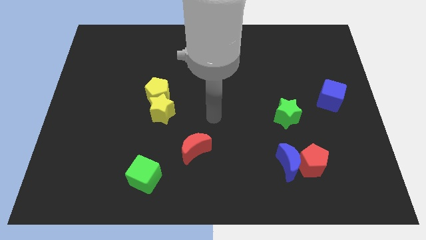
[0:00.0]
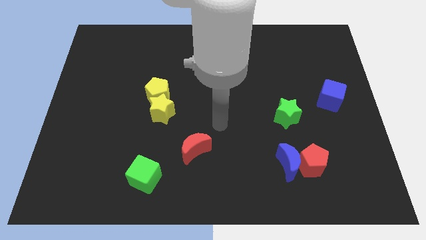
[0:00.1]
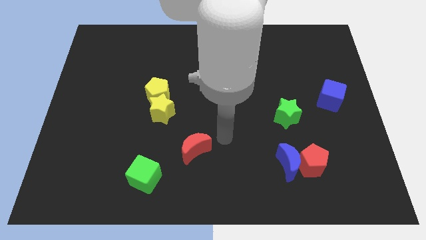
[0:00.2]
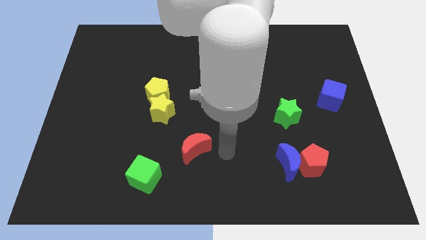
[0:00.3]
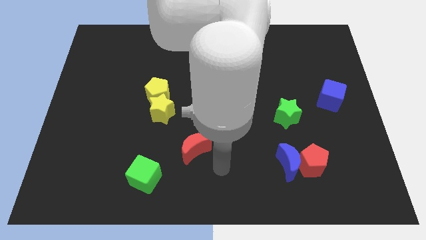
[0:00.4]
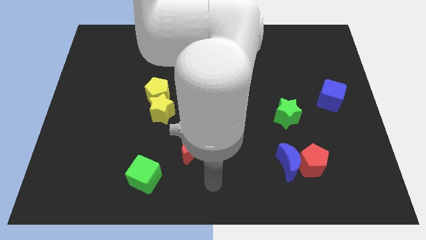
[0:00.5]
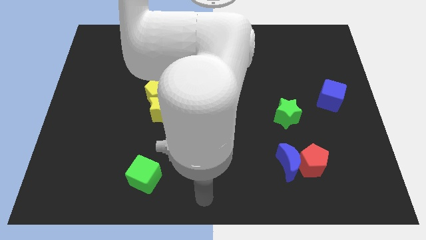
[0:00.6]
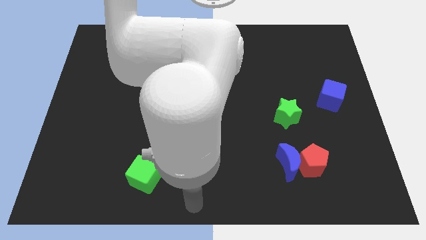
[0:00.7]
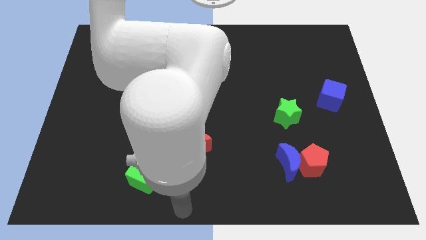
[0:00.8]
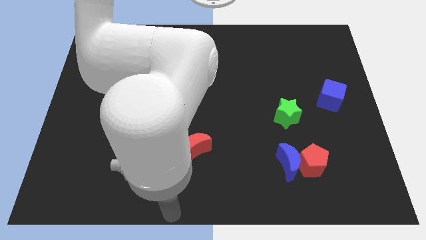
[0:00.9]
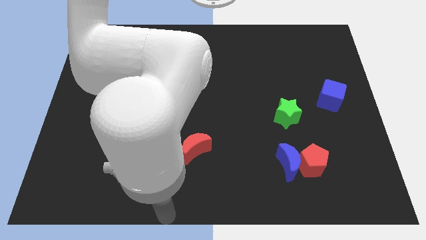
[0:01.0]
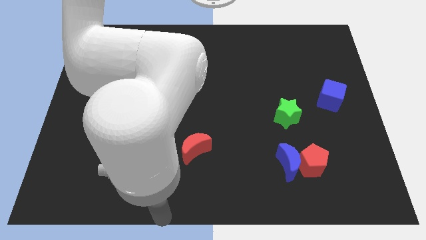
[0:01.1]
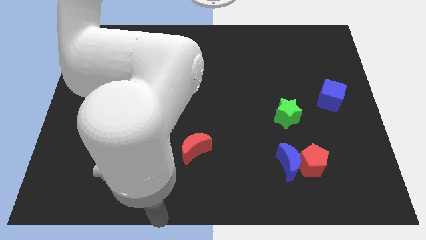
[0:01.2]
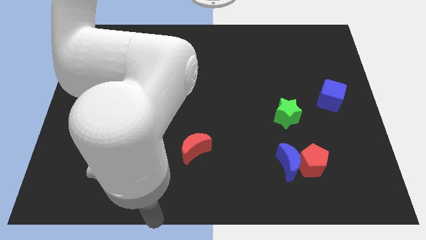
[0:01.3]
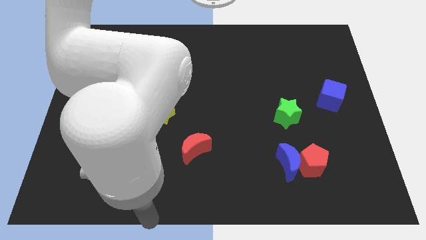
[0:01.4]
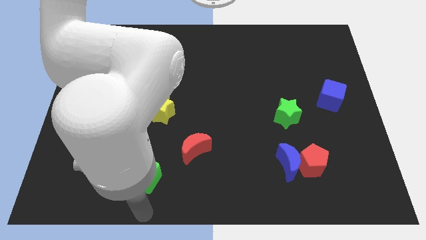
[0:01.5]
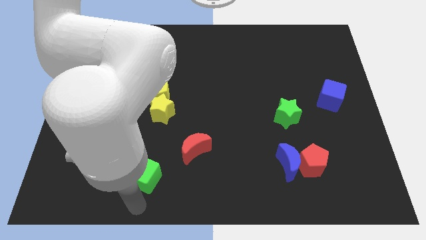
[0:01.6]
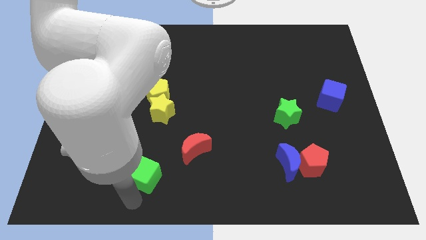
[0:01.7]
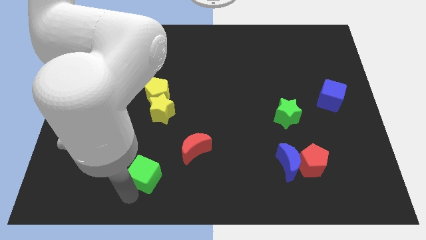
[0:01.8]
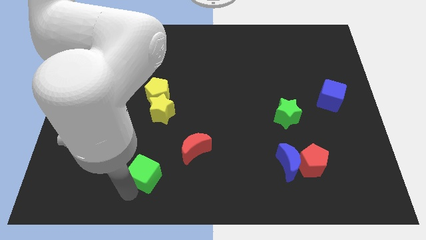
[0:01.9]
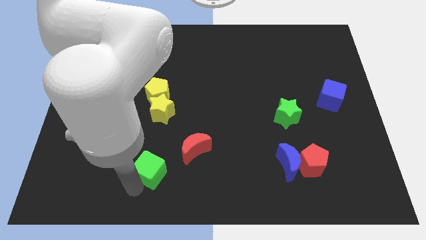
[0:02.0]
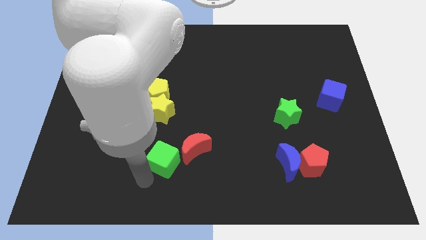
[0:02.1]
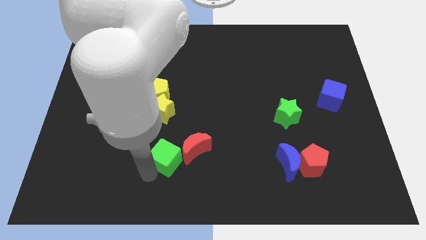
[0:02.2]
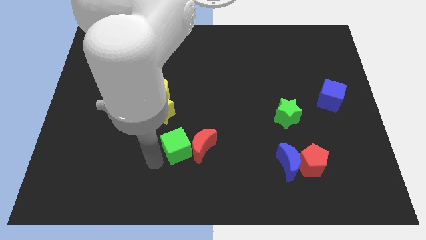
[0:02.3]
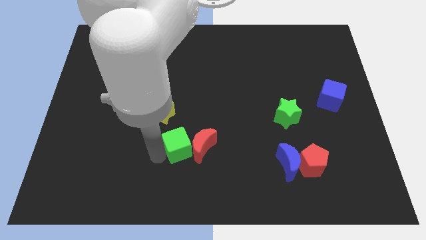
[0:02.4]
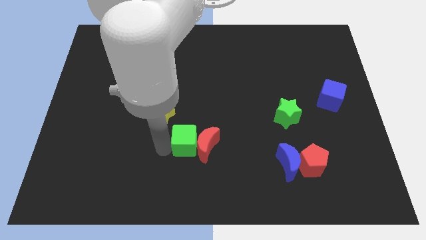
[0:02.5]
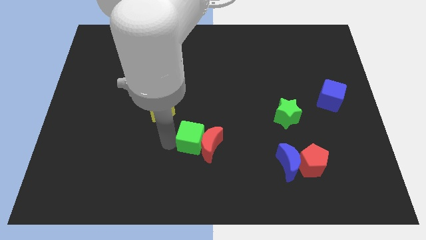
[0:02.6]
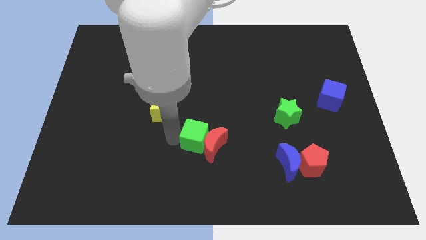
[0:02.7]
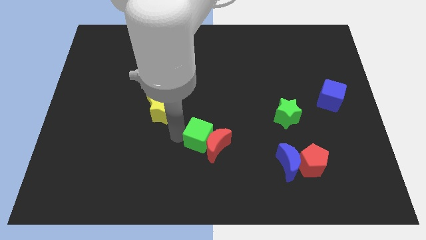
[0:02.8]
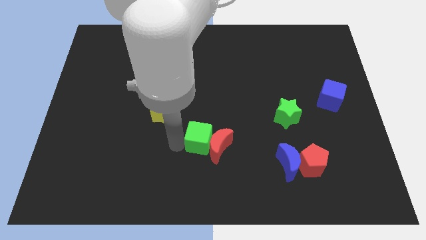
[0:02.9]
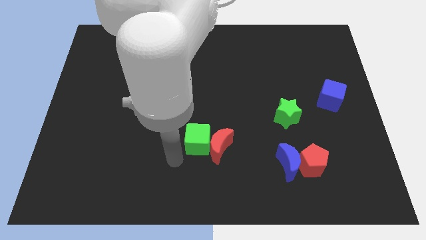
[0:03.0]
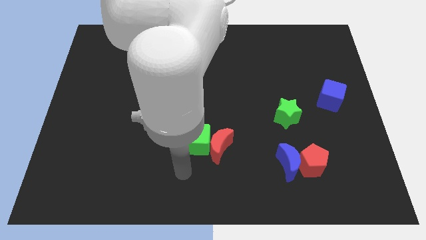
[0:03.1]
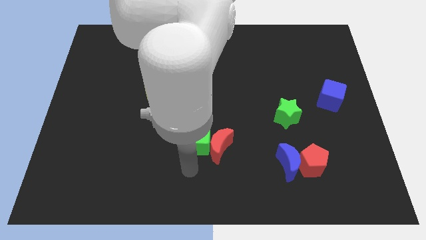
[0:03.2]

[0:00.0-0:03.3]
push the green cube into the red moon

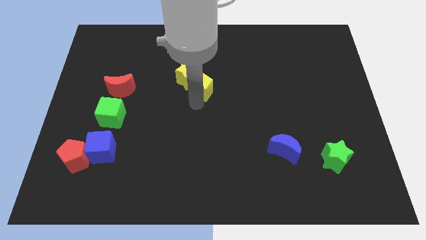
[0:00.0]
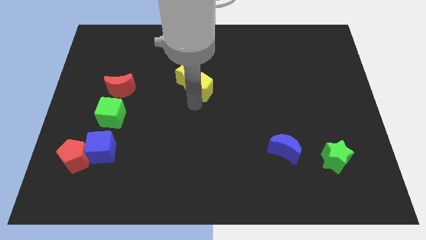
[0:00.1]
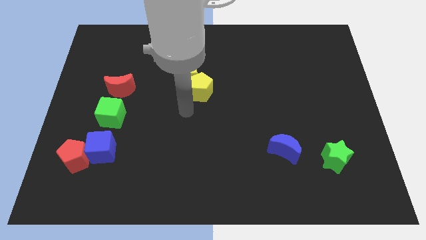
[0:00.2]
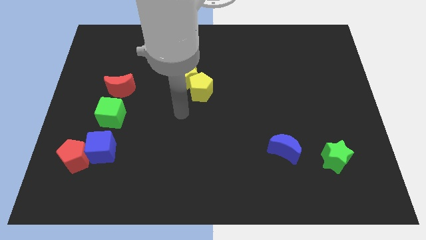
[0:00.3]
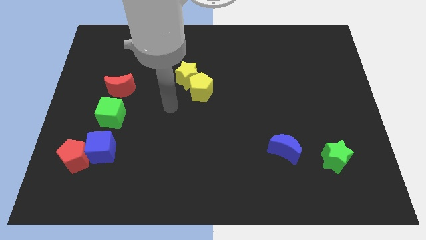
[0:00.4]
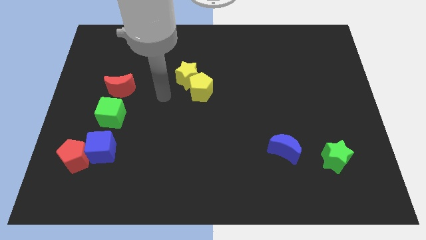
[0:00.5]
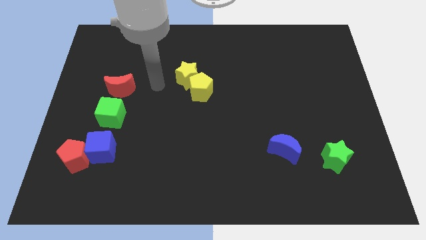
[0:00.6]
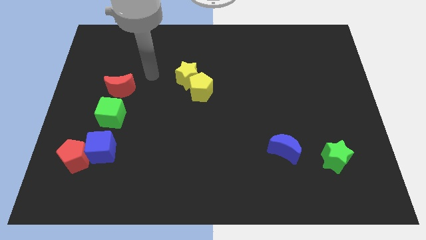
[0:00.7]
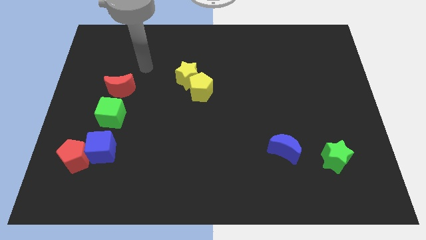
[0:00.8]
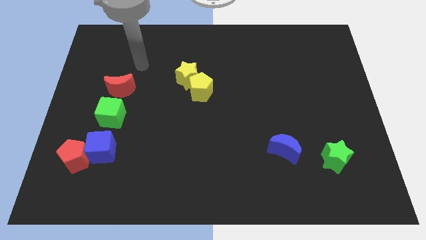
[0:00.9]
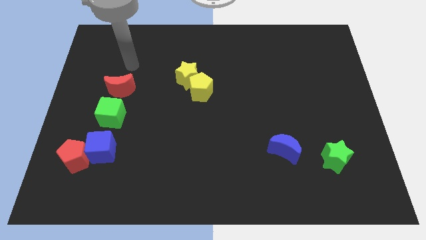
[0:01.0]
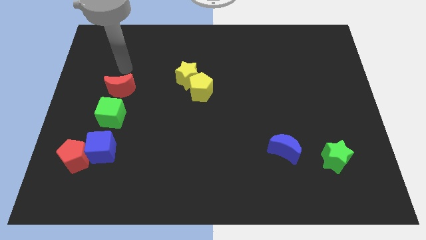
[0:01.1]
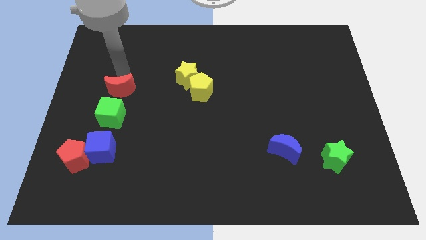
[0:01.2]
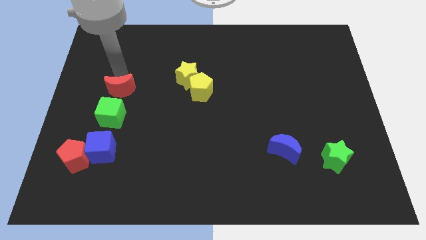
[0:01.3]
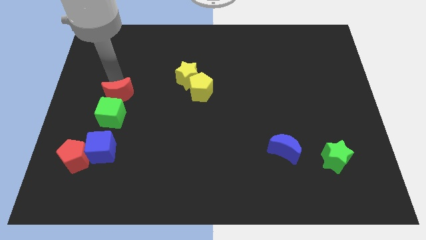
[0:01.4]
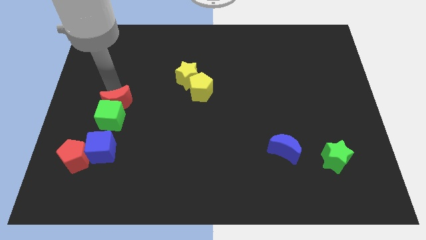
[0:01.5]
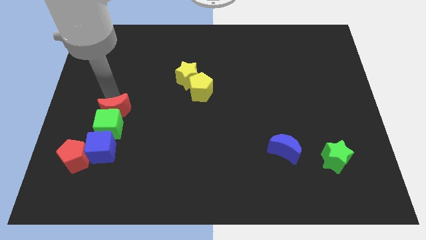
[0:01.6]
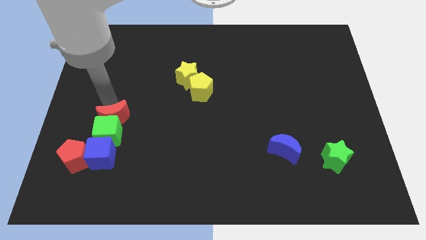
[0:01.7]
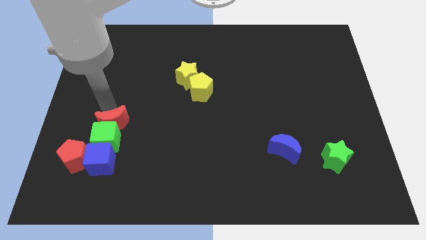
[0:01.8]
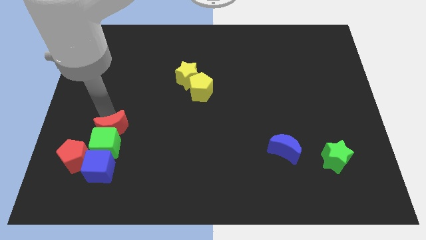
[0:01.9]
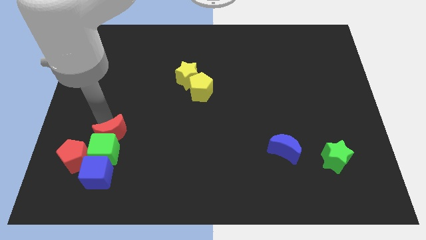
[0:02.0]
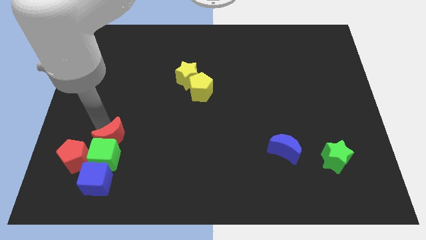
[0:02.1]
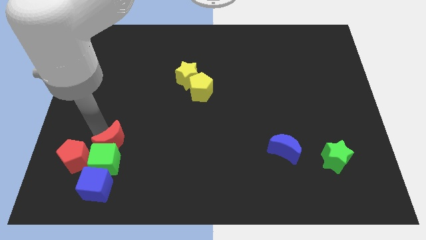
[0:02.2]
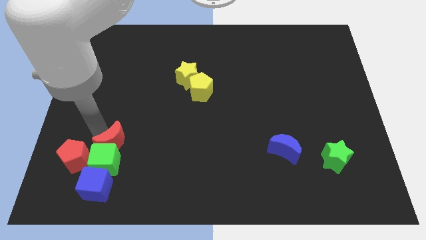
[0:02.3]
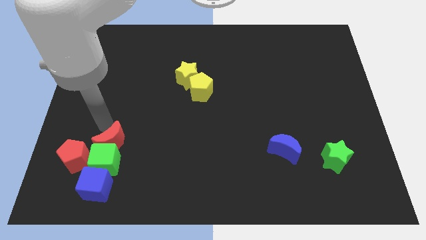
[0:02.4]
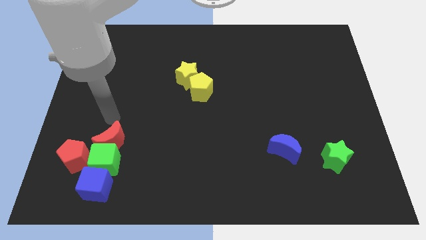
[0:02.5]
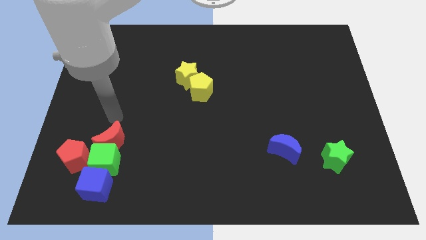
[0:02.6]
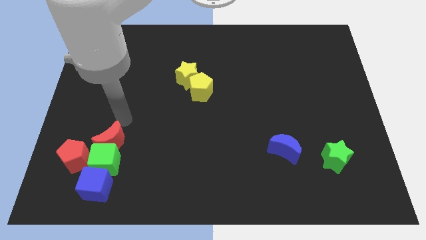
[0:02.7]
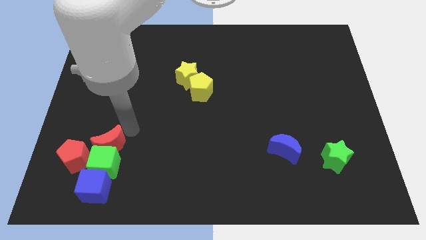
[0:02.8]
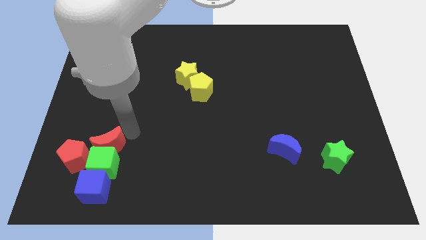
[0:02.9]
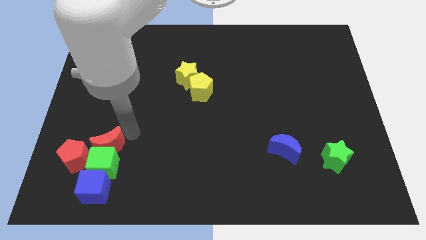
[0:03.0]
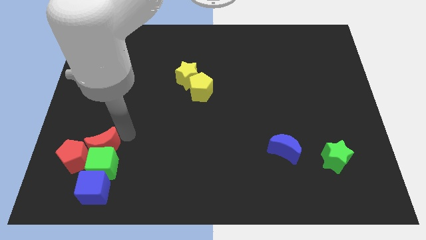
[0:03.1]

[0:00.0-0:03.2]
move the group of blocks to the bottom left of the board

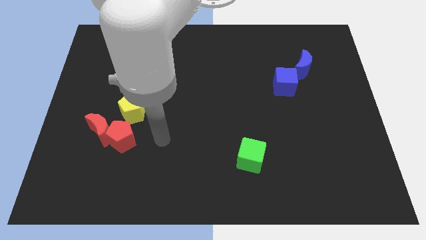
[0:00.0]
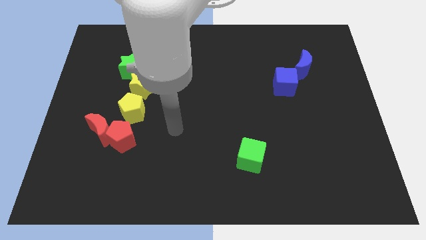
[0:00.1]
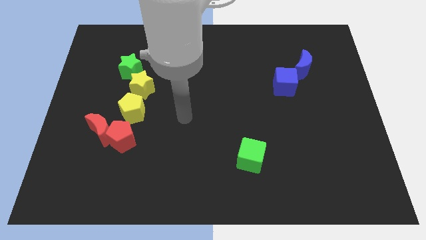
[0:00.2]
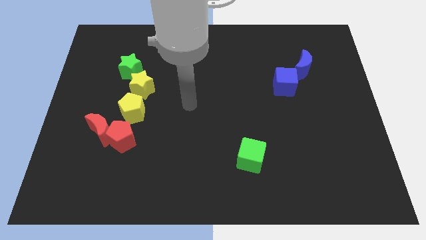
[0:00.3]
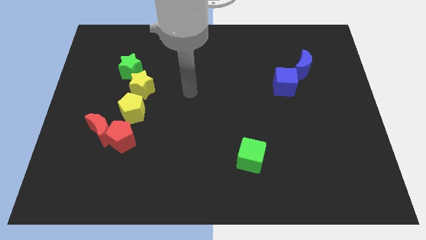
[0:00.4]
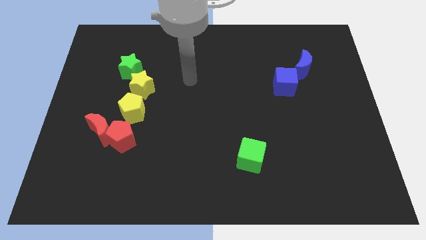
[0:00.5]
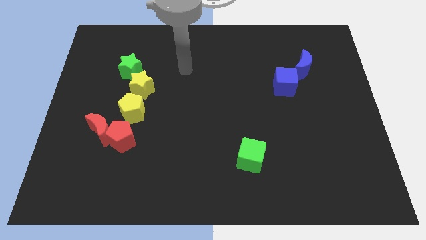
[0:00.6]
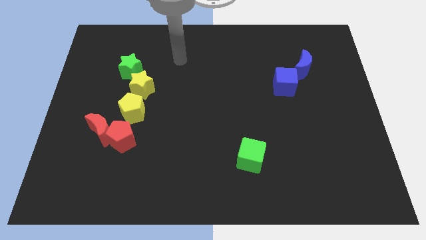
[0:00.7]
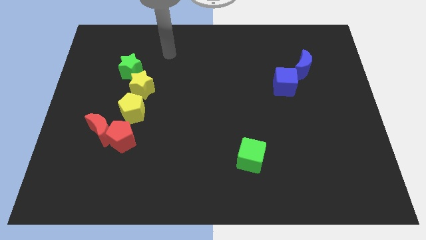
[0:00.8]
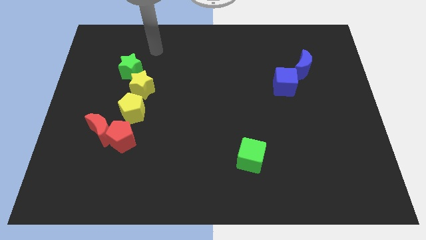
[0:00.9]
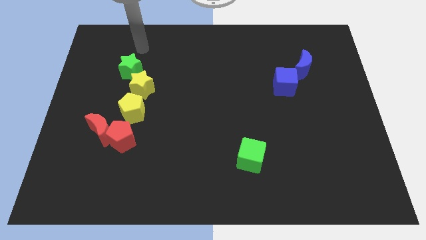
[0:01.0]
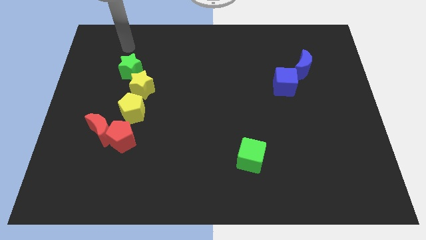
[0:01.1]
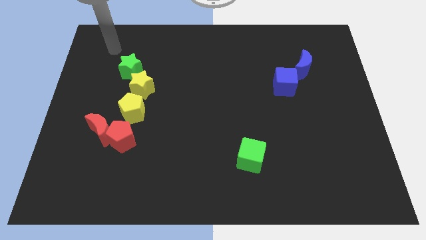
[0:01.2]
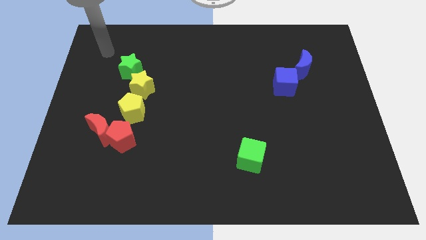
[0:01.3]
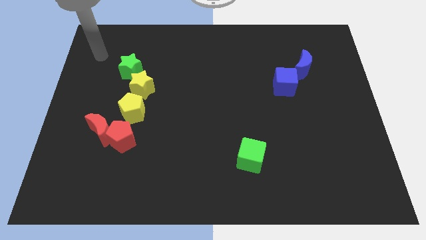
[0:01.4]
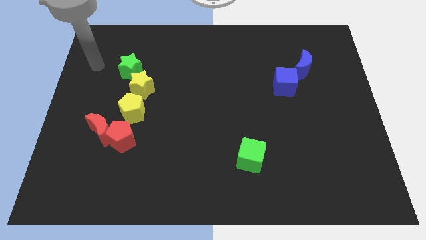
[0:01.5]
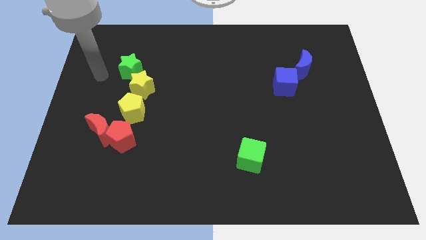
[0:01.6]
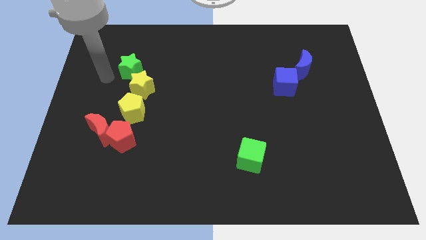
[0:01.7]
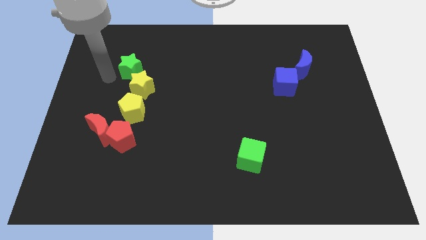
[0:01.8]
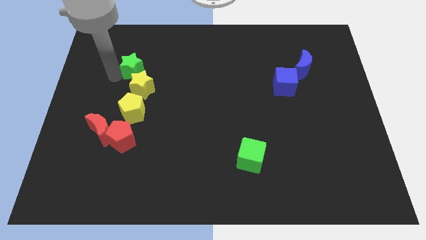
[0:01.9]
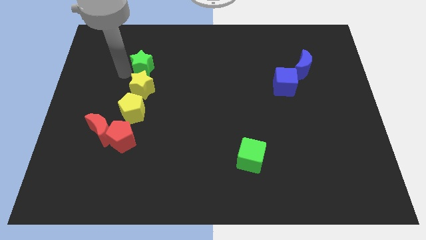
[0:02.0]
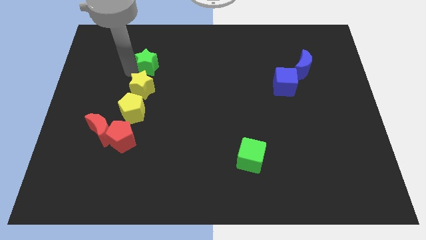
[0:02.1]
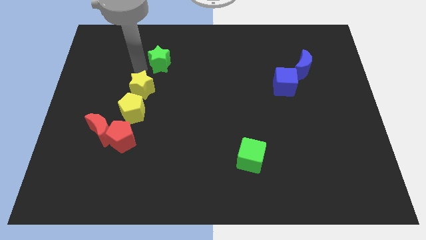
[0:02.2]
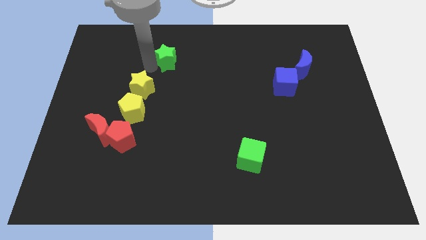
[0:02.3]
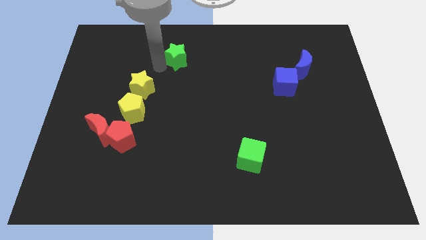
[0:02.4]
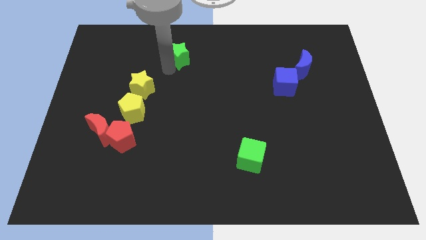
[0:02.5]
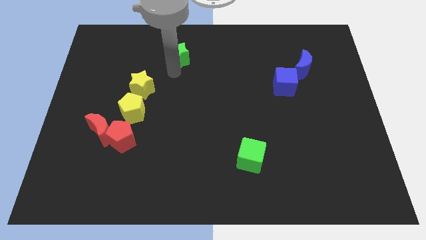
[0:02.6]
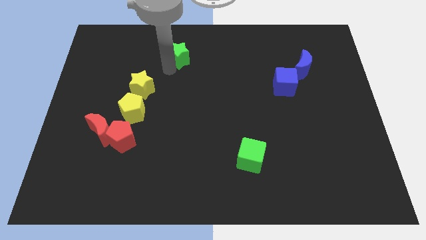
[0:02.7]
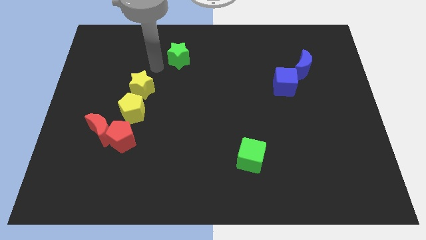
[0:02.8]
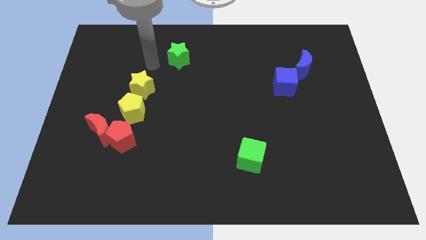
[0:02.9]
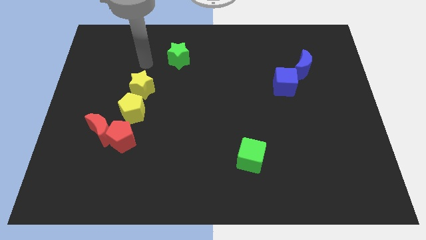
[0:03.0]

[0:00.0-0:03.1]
separate the green star from the yellow star
